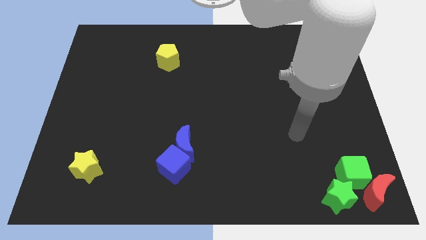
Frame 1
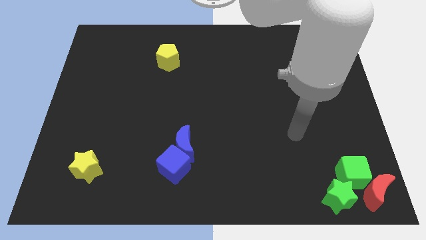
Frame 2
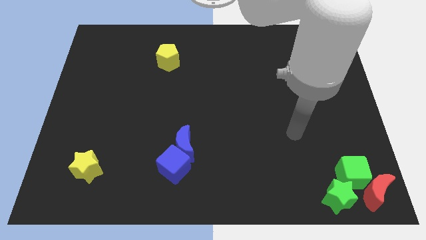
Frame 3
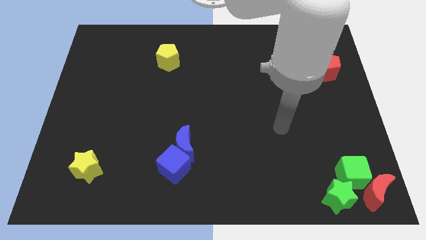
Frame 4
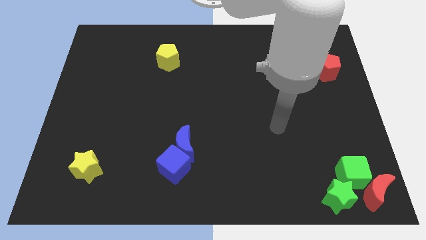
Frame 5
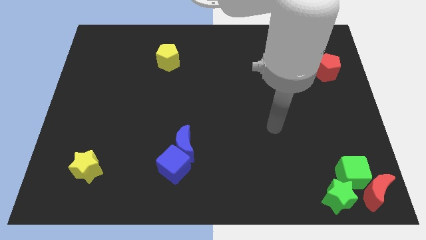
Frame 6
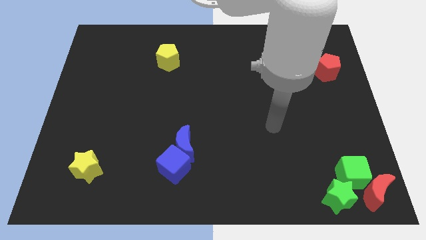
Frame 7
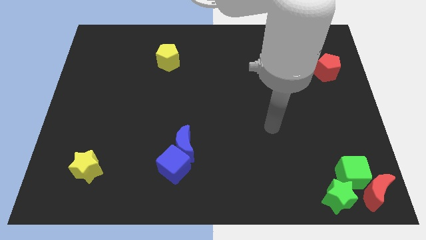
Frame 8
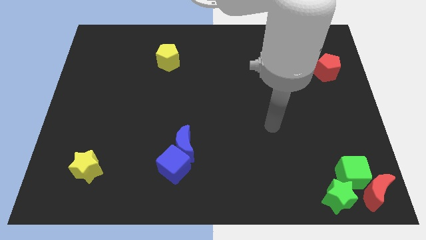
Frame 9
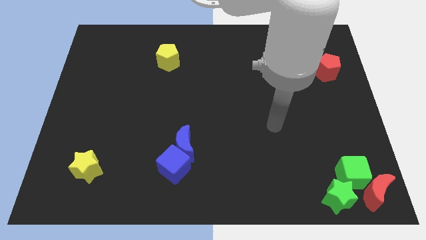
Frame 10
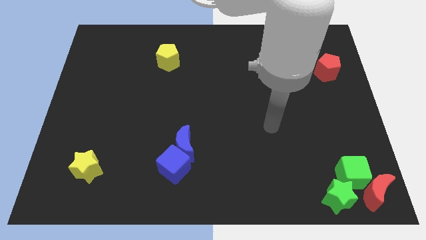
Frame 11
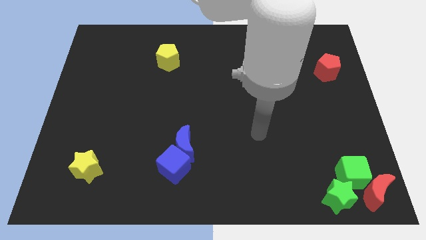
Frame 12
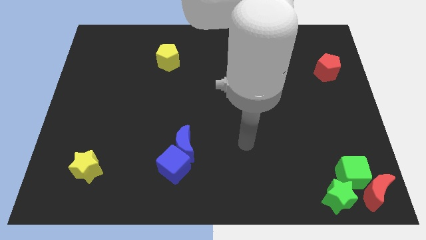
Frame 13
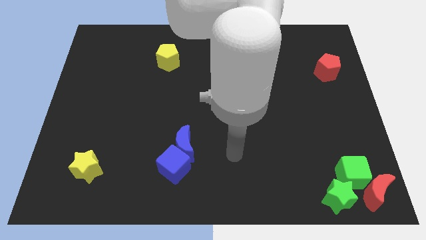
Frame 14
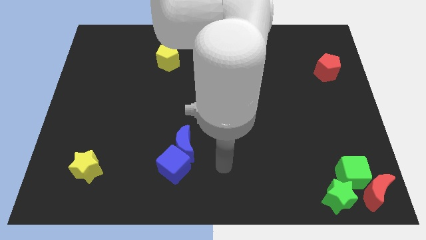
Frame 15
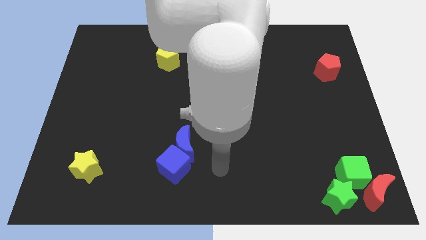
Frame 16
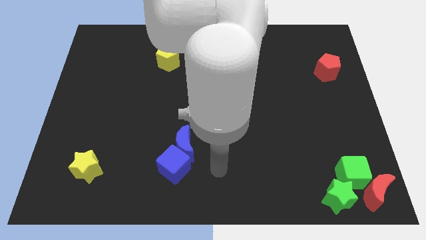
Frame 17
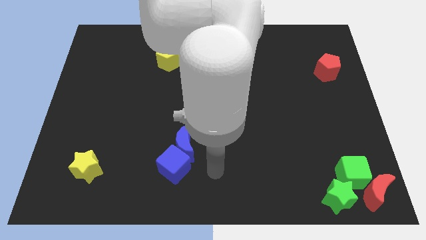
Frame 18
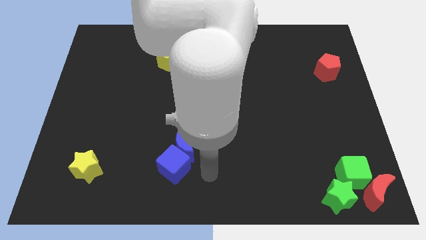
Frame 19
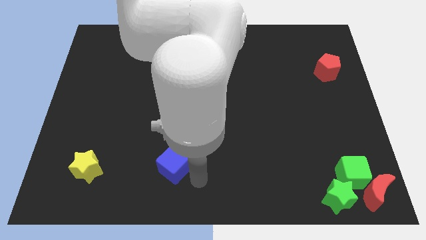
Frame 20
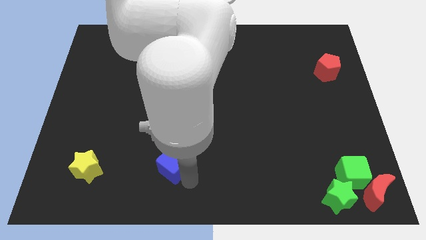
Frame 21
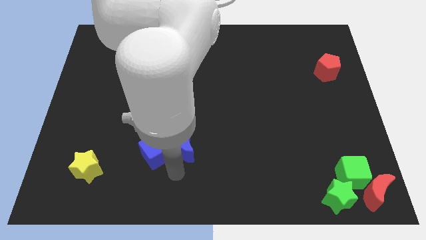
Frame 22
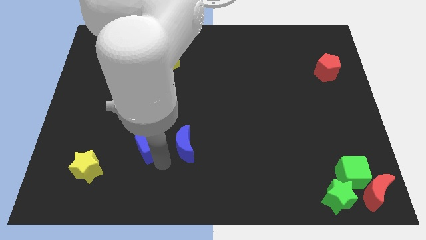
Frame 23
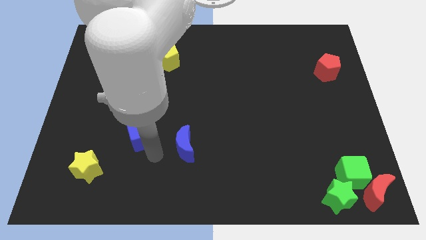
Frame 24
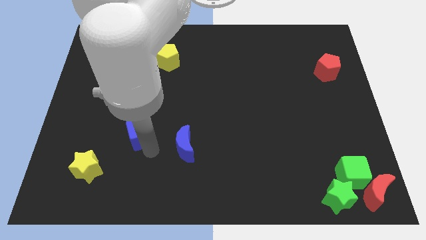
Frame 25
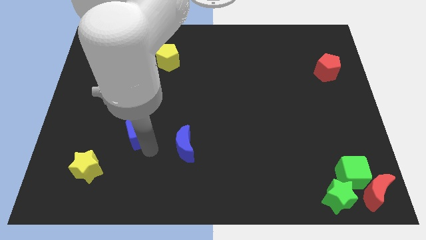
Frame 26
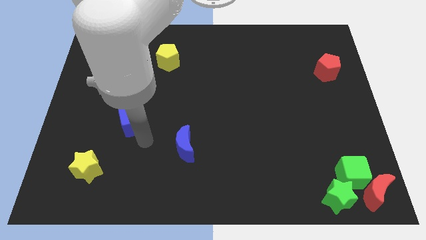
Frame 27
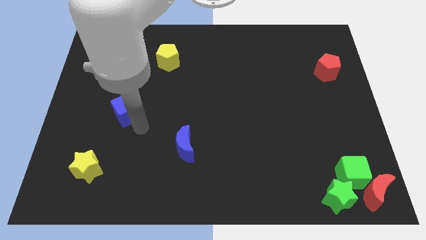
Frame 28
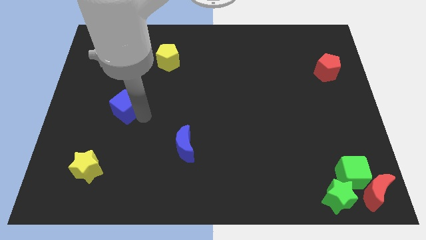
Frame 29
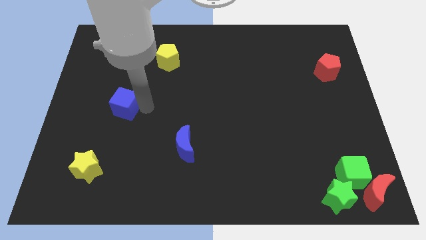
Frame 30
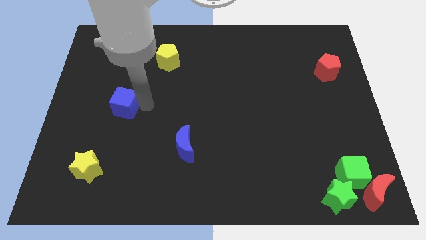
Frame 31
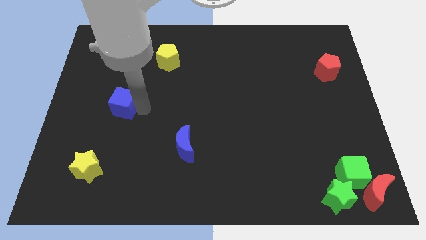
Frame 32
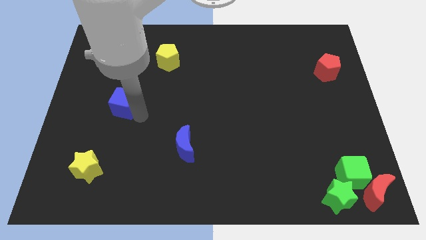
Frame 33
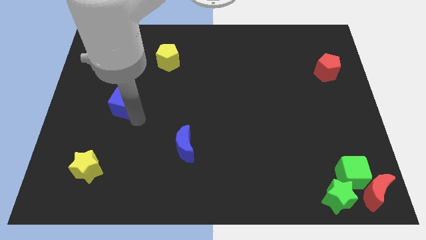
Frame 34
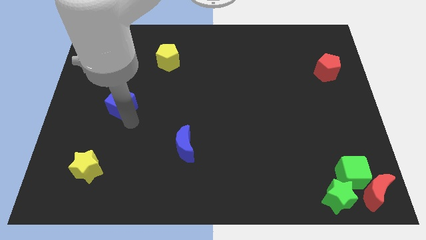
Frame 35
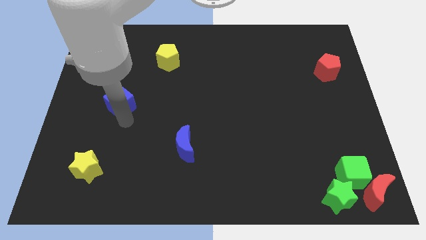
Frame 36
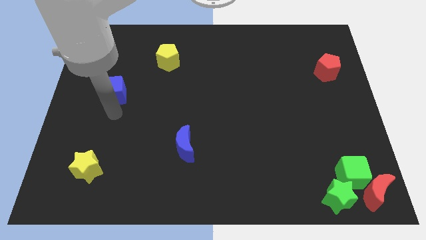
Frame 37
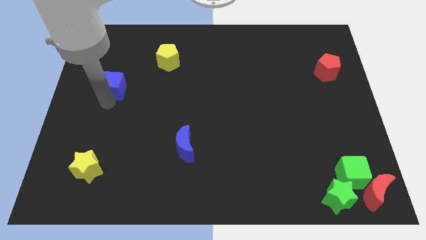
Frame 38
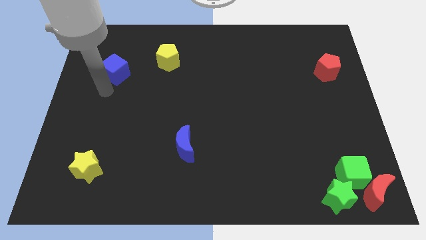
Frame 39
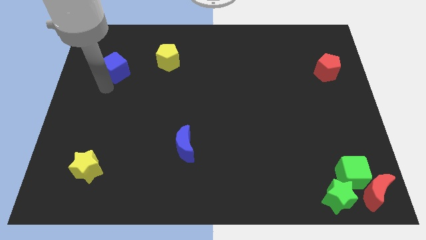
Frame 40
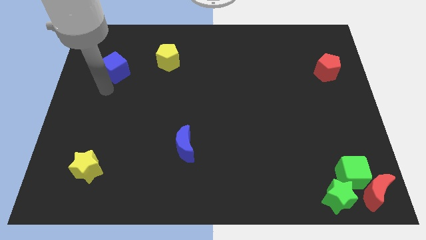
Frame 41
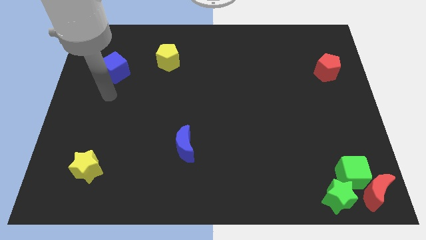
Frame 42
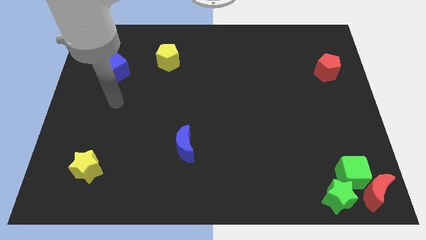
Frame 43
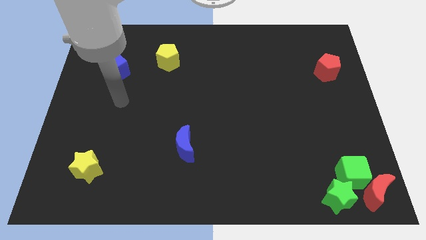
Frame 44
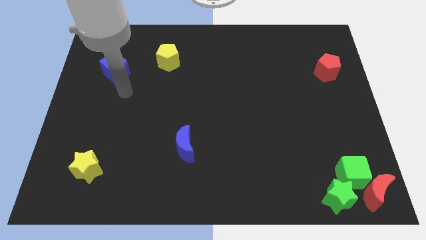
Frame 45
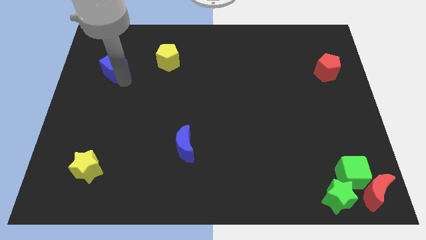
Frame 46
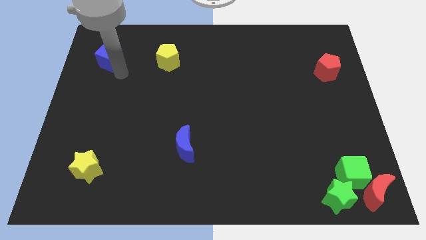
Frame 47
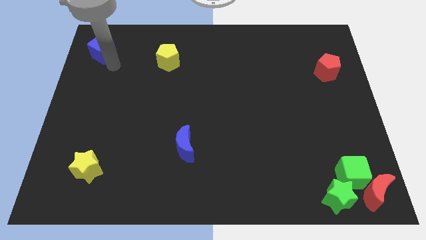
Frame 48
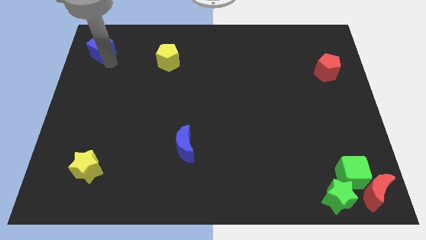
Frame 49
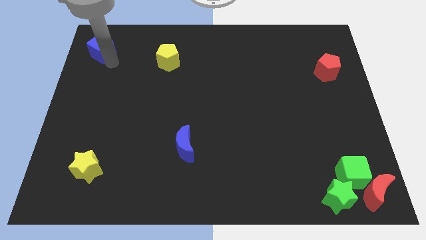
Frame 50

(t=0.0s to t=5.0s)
move the blue cube to the left of the yellow pentagon

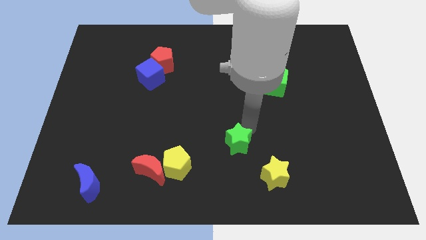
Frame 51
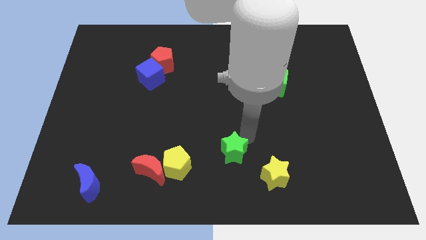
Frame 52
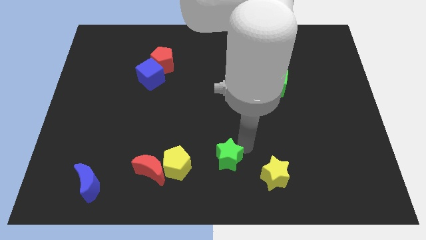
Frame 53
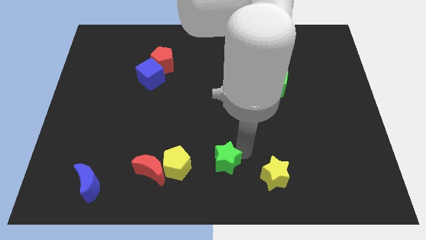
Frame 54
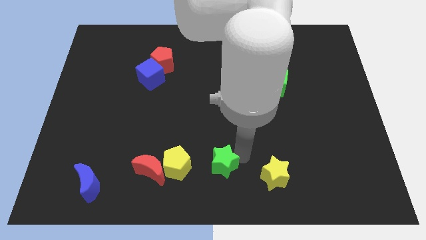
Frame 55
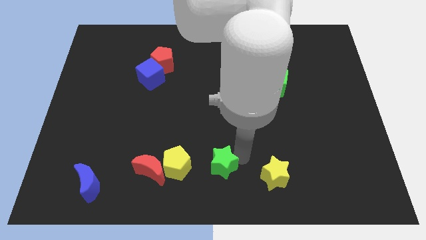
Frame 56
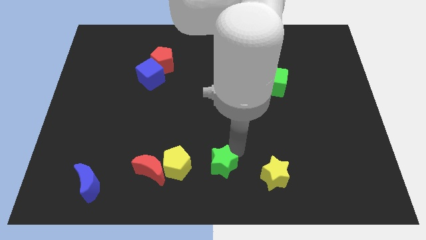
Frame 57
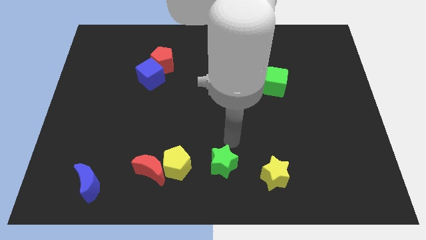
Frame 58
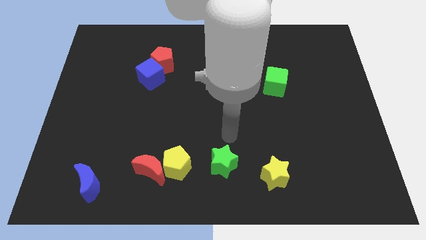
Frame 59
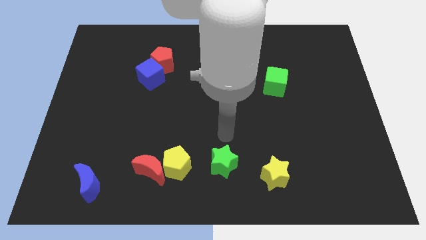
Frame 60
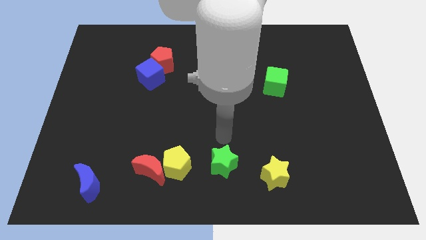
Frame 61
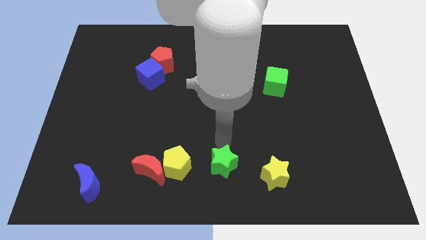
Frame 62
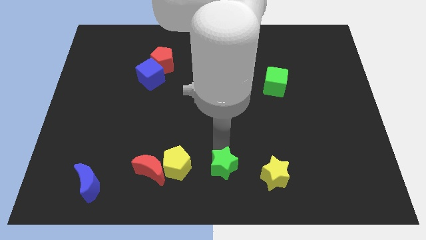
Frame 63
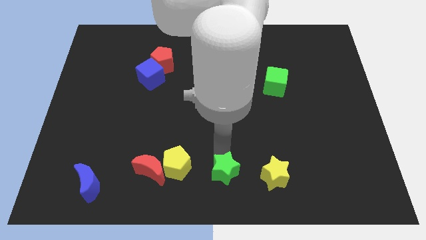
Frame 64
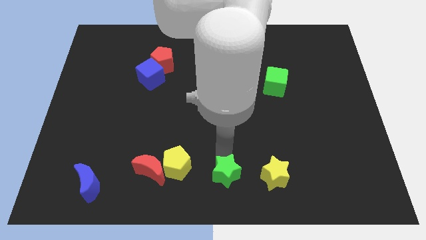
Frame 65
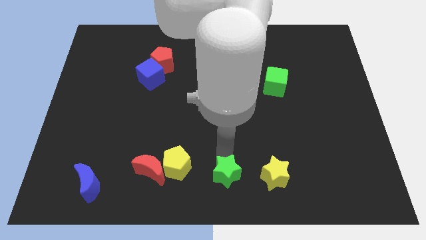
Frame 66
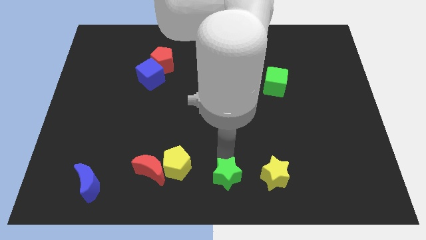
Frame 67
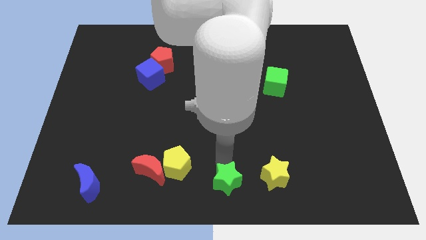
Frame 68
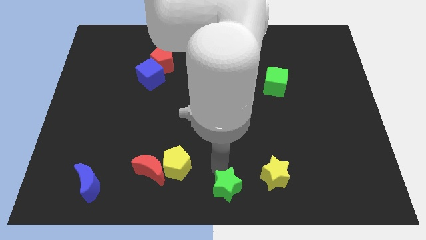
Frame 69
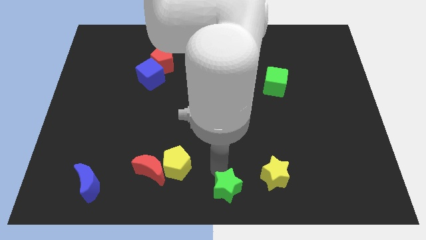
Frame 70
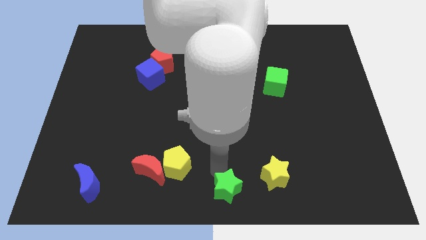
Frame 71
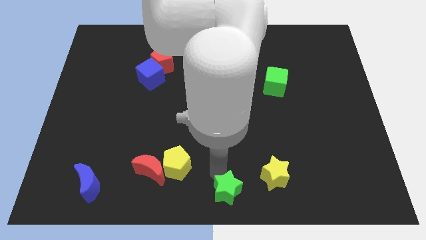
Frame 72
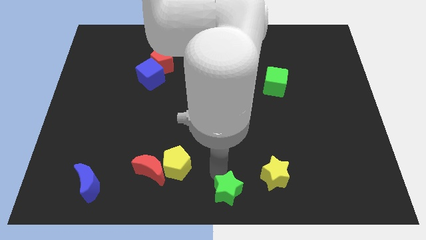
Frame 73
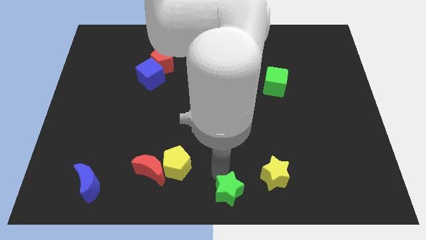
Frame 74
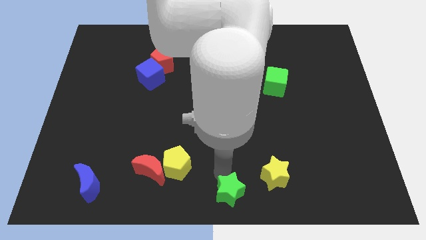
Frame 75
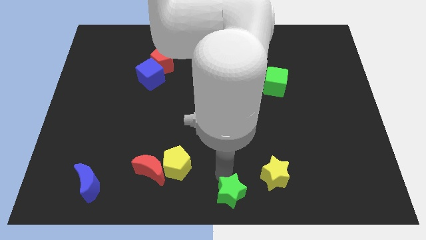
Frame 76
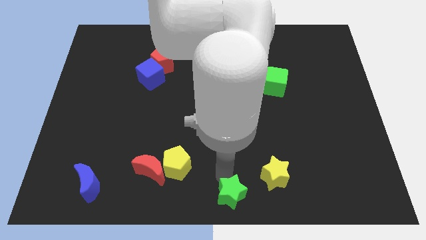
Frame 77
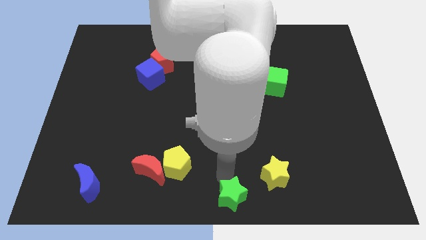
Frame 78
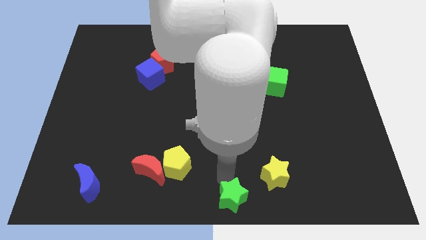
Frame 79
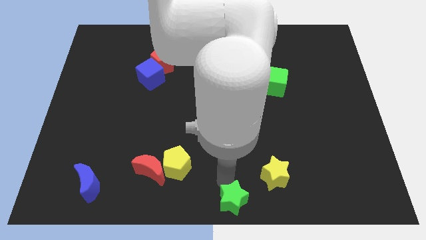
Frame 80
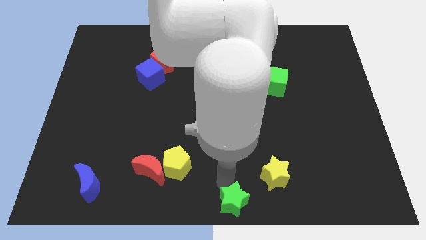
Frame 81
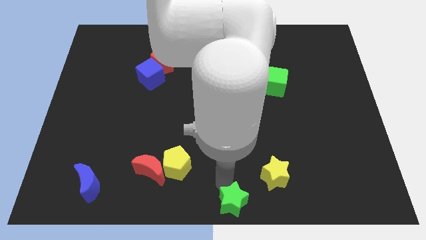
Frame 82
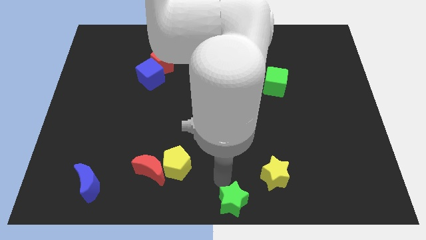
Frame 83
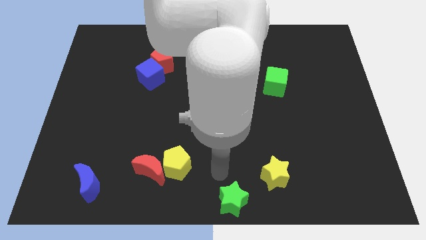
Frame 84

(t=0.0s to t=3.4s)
place the green star in the bottom center

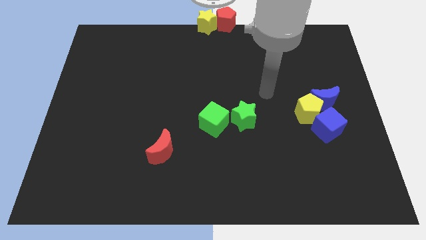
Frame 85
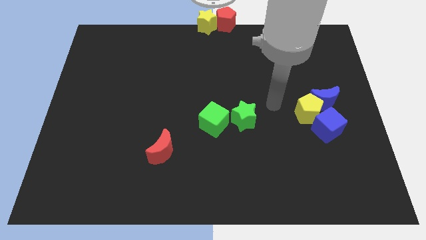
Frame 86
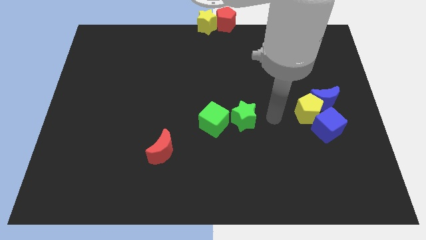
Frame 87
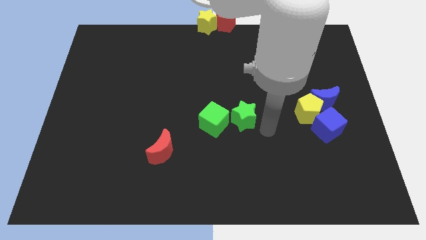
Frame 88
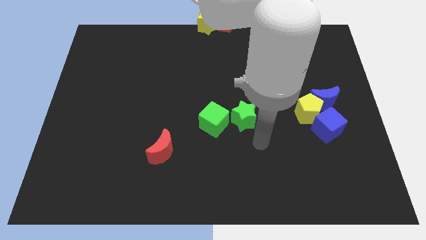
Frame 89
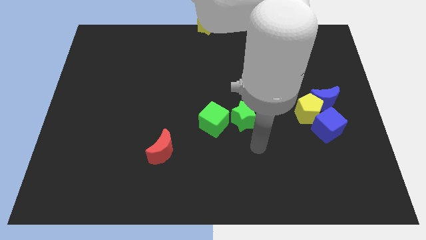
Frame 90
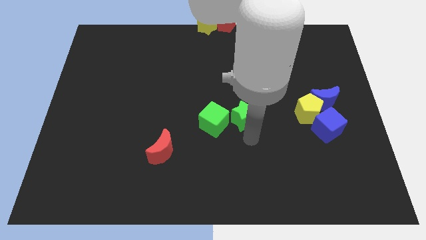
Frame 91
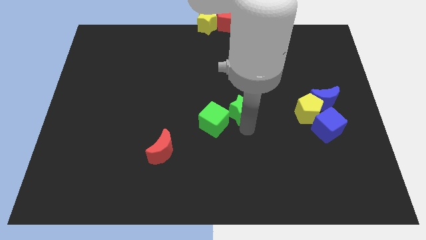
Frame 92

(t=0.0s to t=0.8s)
move your arm to the bottom of the green star

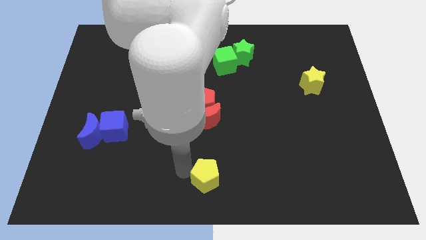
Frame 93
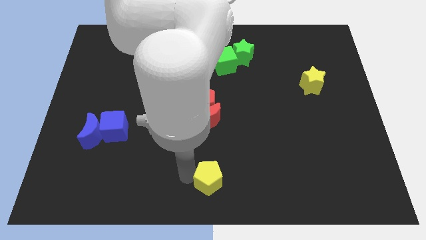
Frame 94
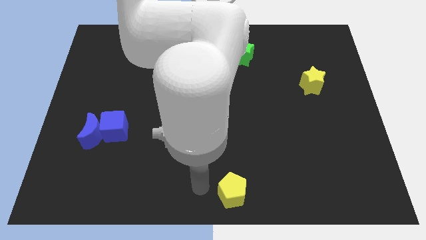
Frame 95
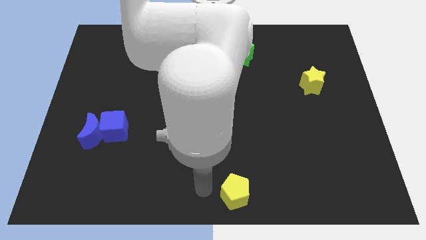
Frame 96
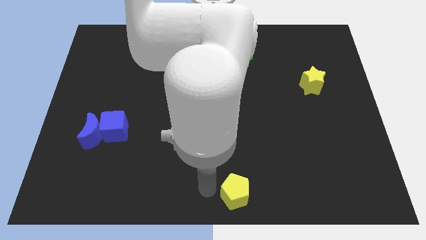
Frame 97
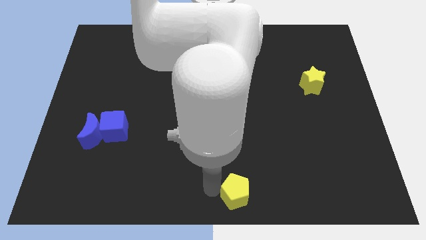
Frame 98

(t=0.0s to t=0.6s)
push the yellow pentagon towards the bottom center
